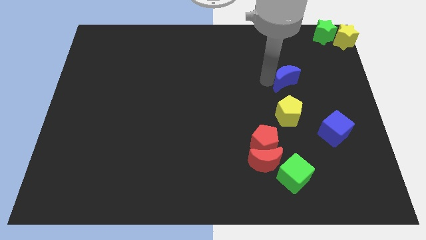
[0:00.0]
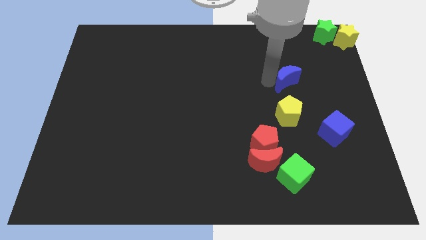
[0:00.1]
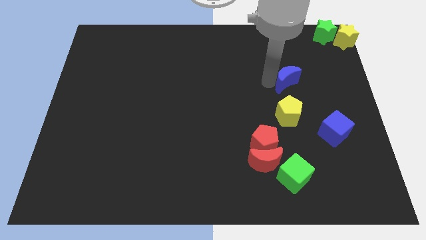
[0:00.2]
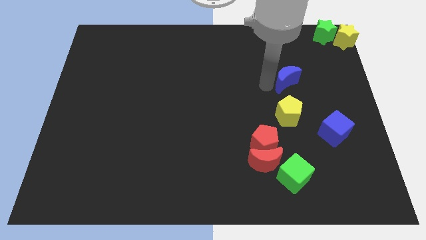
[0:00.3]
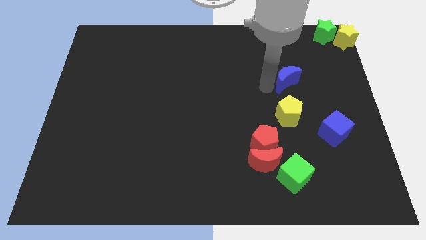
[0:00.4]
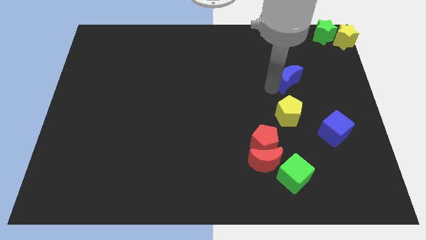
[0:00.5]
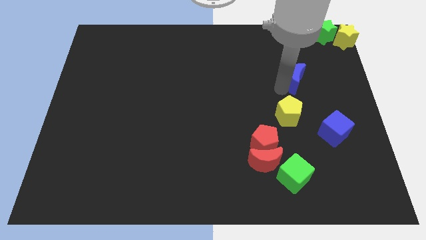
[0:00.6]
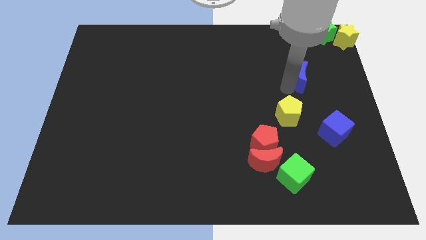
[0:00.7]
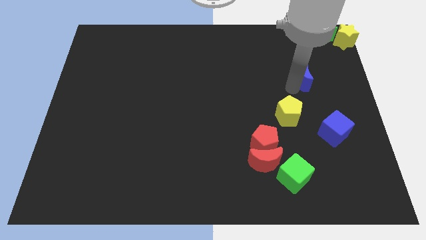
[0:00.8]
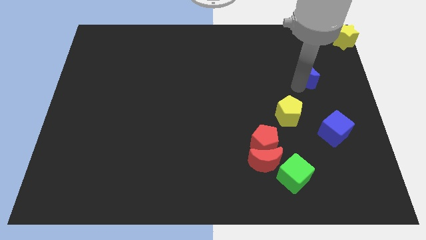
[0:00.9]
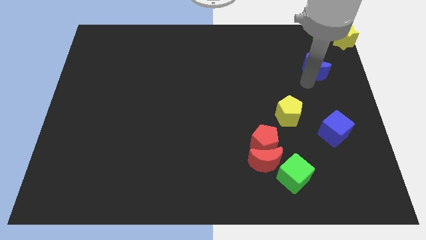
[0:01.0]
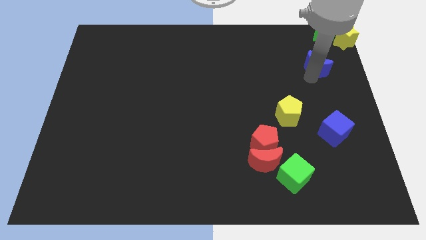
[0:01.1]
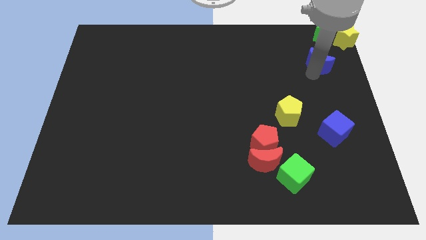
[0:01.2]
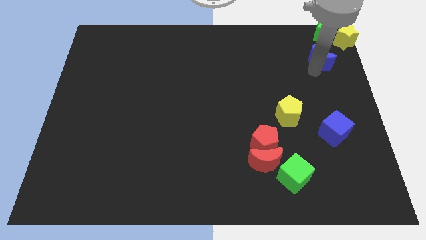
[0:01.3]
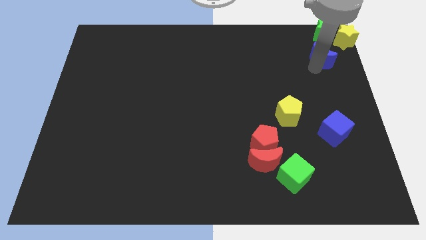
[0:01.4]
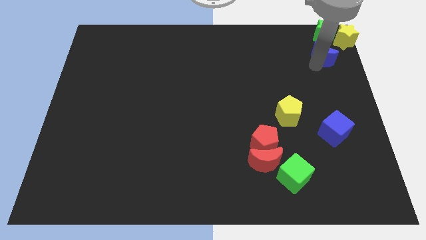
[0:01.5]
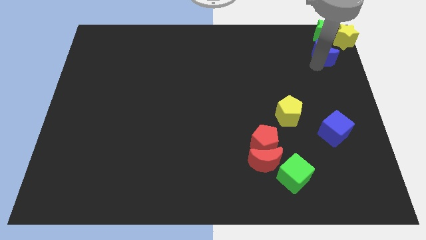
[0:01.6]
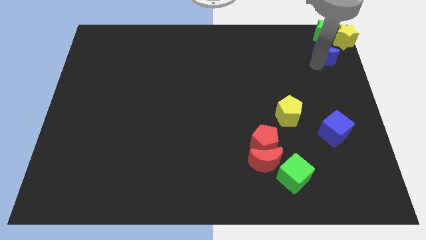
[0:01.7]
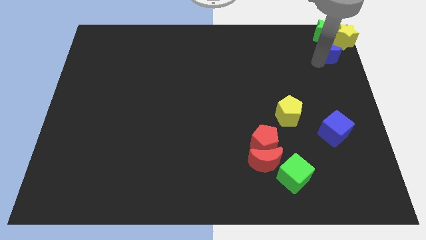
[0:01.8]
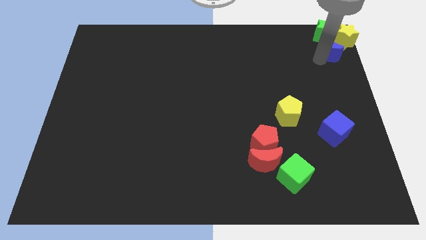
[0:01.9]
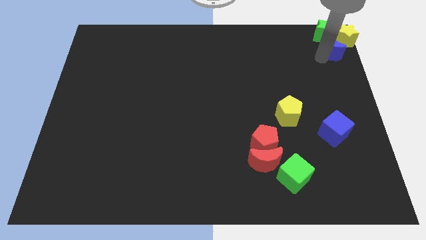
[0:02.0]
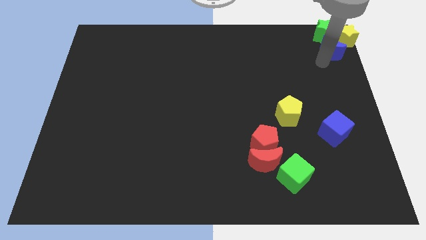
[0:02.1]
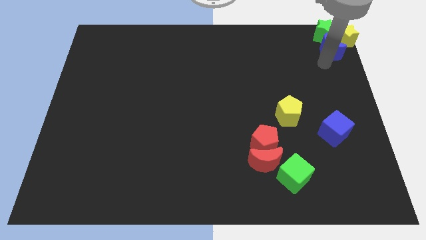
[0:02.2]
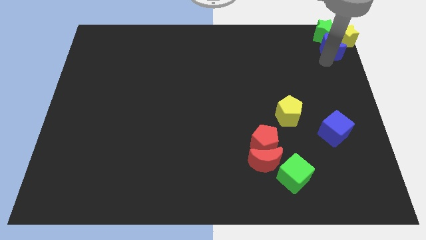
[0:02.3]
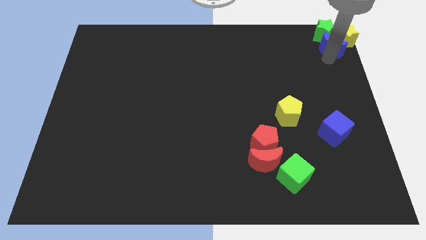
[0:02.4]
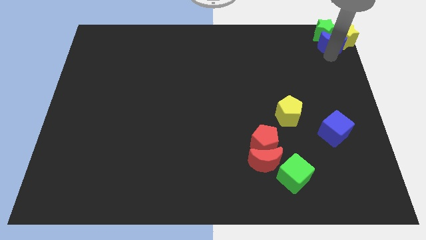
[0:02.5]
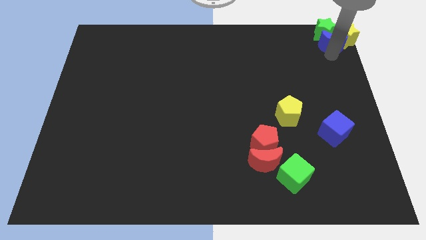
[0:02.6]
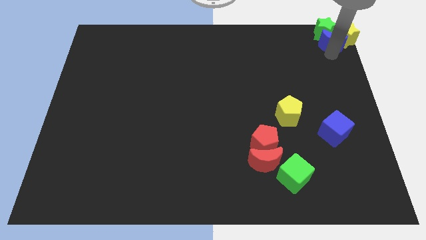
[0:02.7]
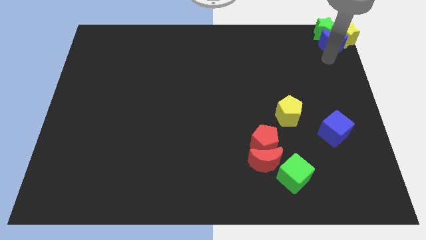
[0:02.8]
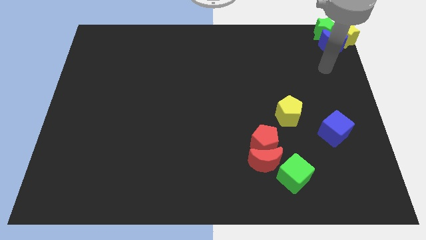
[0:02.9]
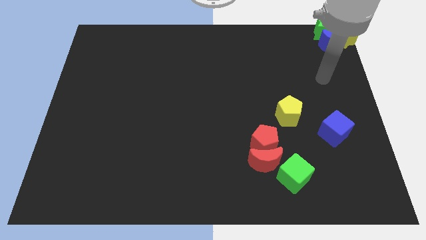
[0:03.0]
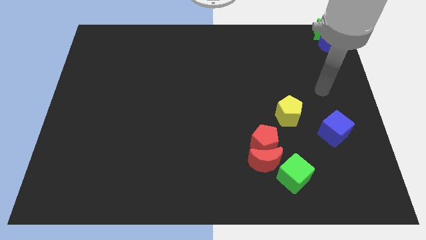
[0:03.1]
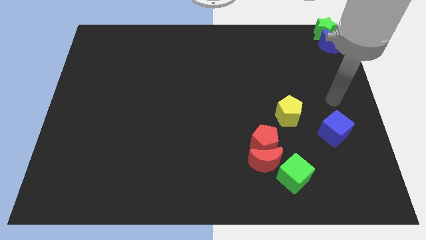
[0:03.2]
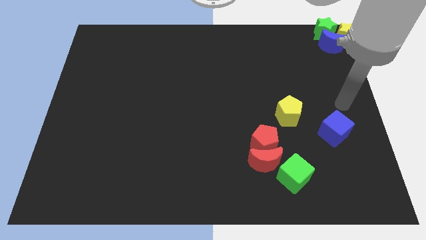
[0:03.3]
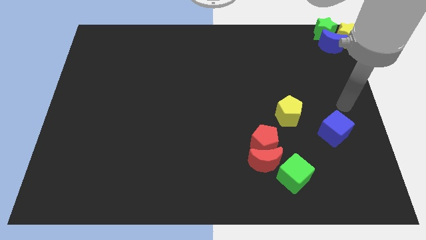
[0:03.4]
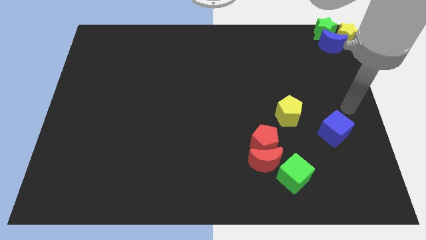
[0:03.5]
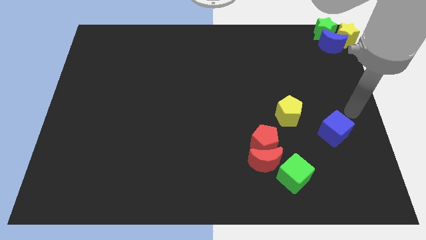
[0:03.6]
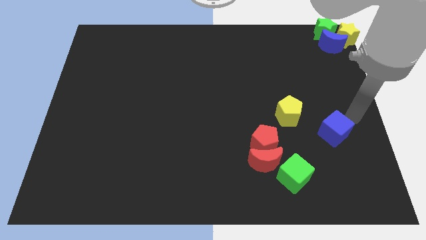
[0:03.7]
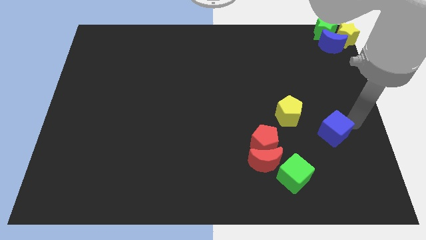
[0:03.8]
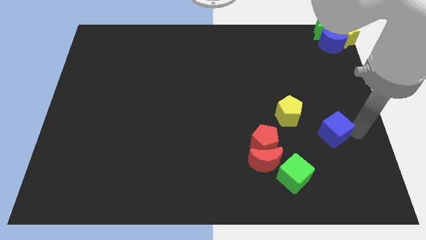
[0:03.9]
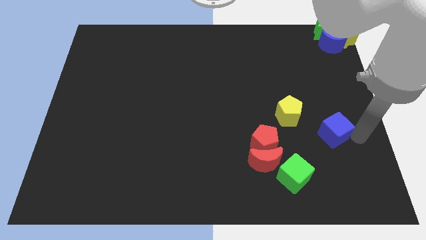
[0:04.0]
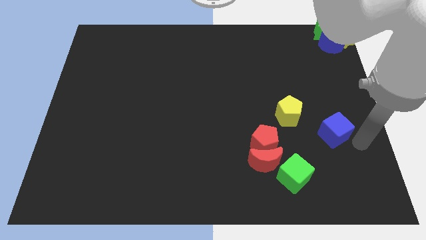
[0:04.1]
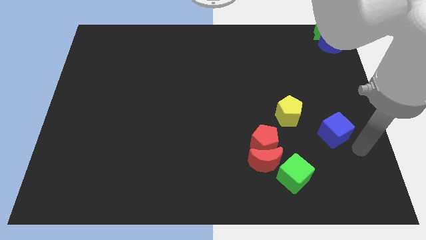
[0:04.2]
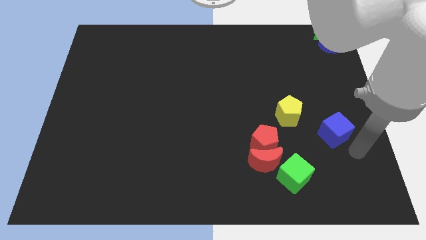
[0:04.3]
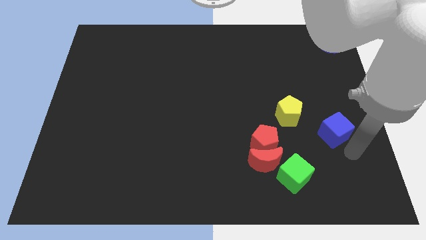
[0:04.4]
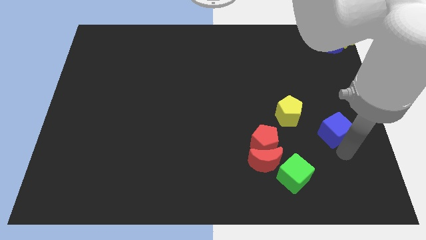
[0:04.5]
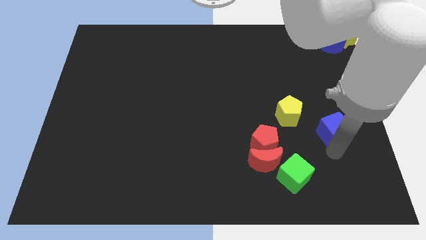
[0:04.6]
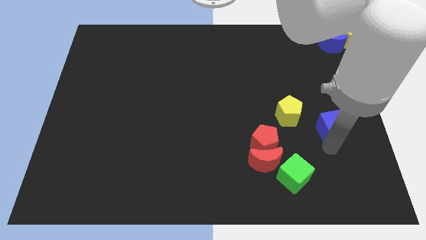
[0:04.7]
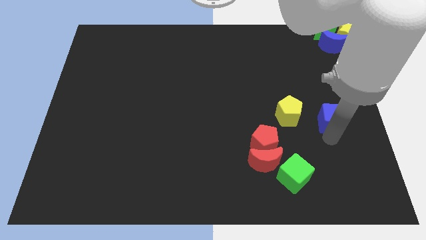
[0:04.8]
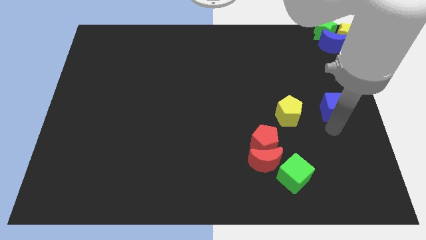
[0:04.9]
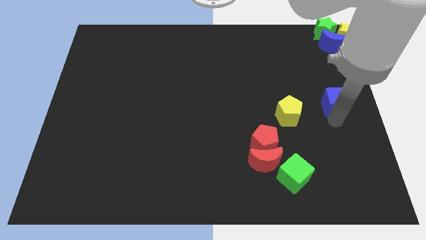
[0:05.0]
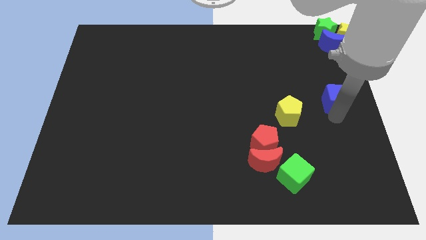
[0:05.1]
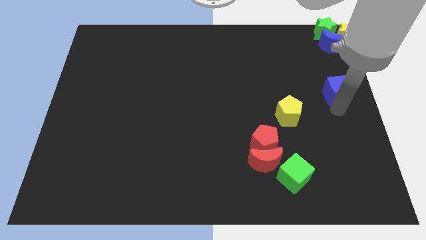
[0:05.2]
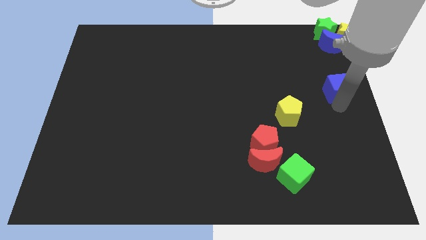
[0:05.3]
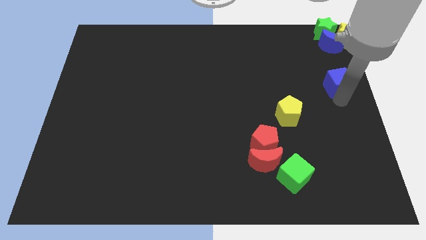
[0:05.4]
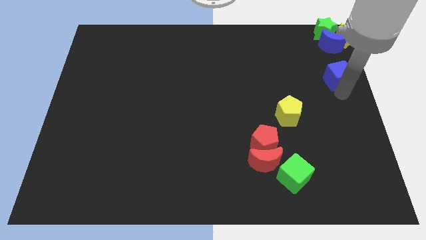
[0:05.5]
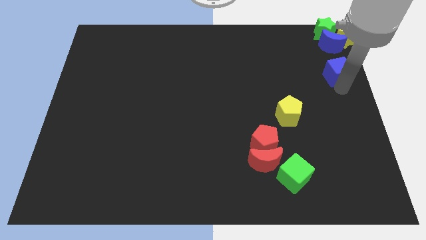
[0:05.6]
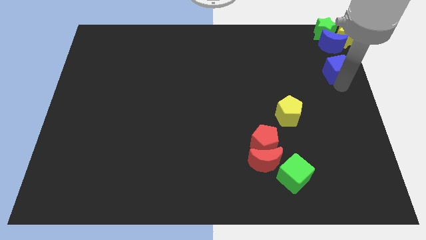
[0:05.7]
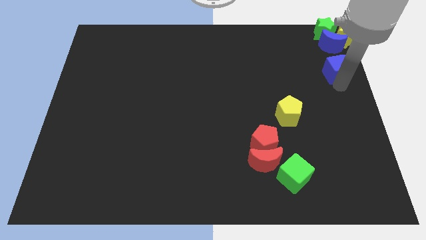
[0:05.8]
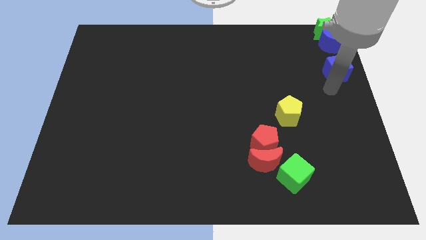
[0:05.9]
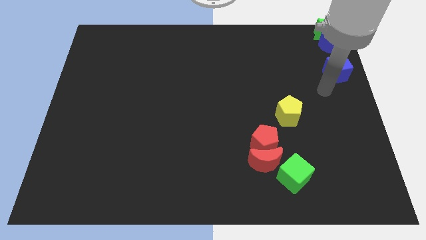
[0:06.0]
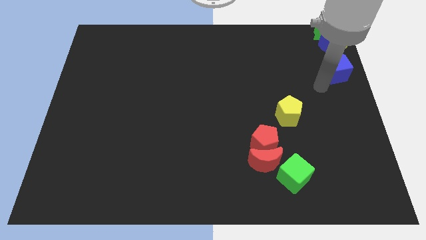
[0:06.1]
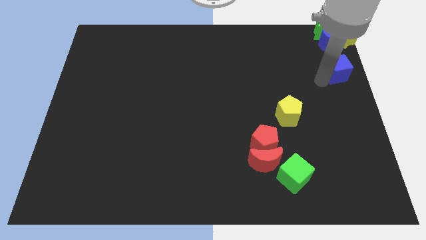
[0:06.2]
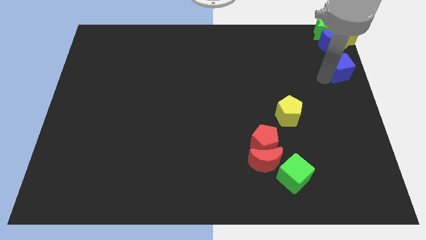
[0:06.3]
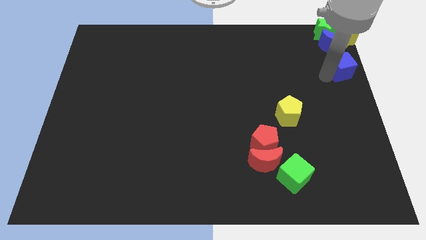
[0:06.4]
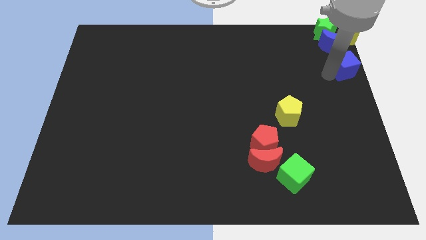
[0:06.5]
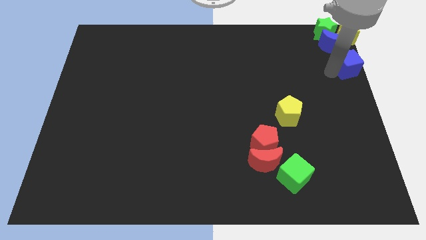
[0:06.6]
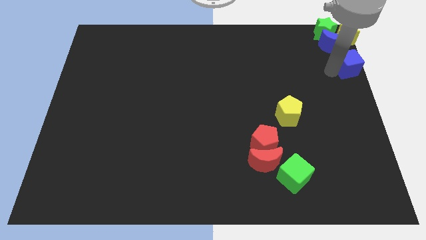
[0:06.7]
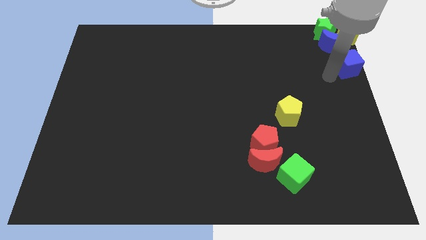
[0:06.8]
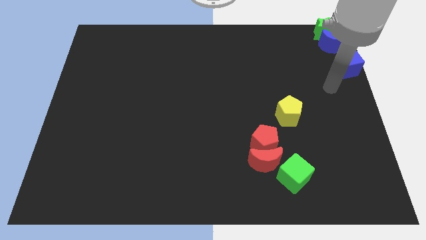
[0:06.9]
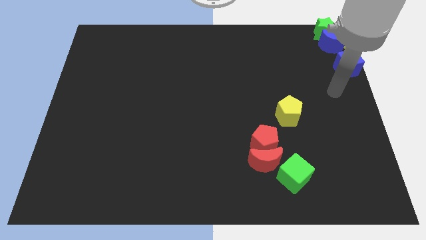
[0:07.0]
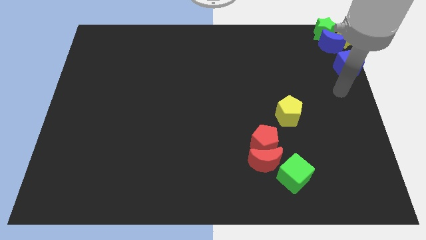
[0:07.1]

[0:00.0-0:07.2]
move the blue cube to the top right of the board

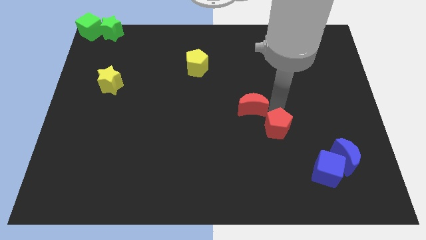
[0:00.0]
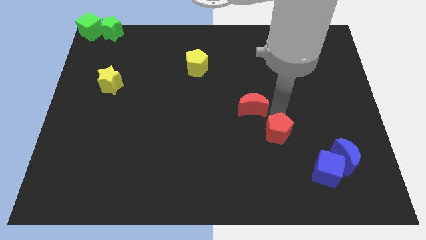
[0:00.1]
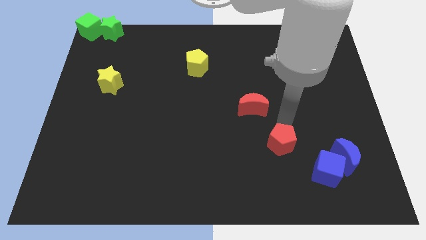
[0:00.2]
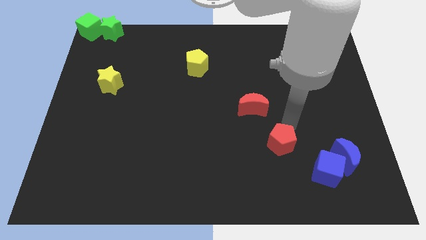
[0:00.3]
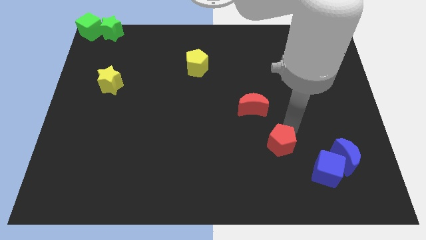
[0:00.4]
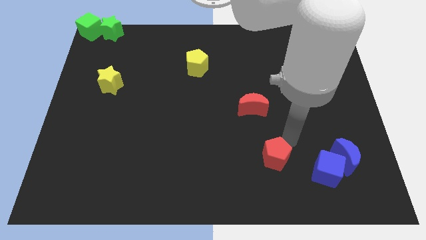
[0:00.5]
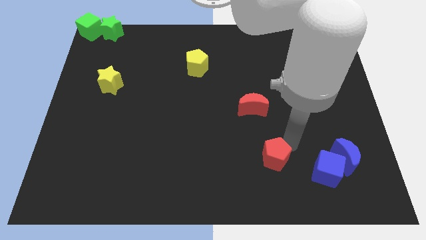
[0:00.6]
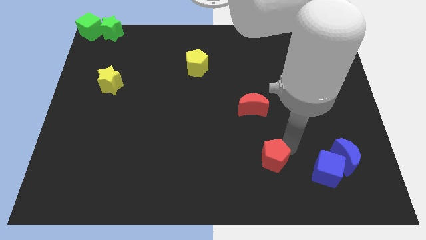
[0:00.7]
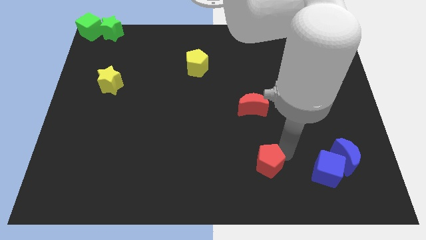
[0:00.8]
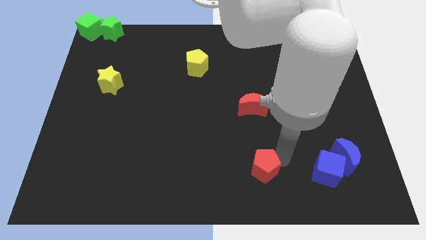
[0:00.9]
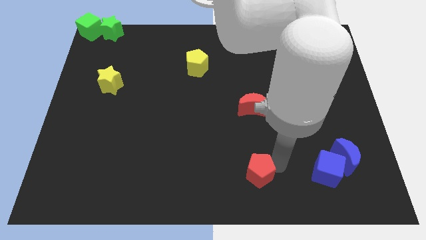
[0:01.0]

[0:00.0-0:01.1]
push red pentagon below red crescent

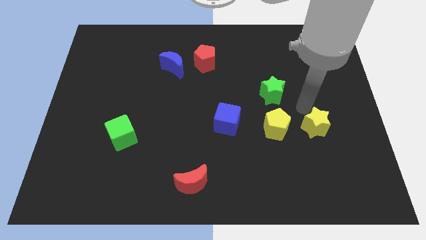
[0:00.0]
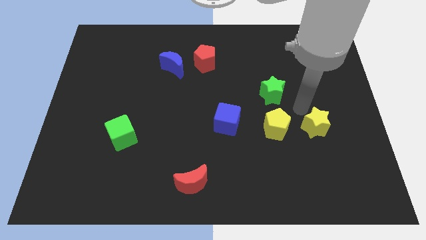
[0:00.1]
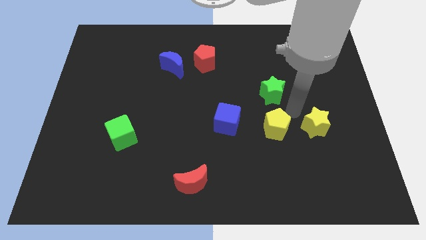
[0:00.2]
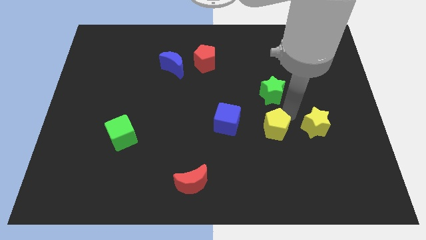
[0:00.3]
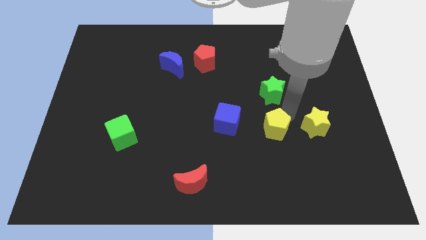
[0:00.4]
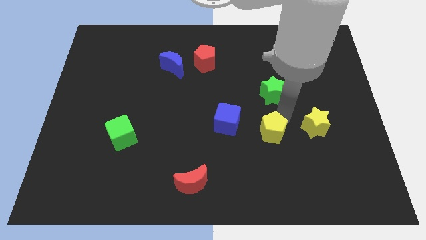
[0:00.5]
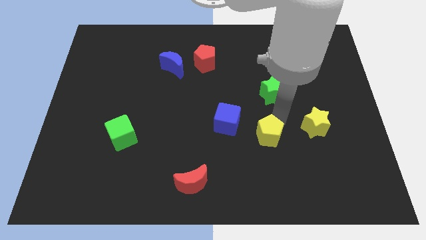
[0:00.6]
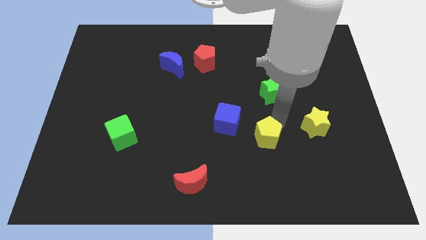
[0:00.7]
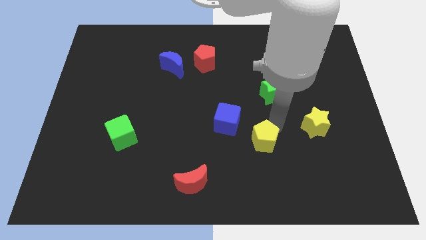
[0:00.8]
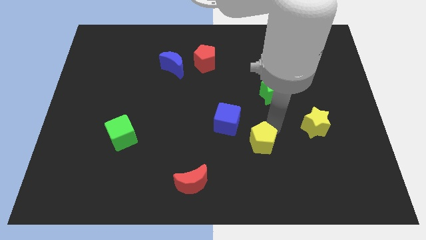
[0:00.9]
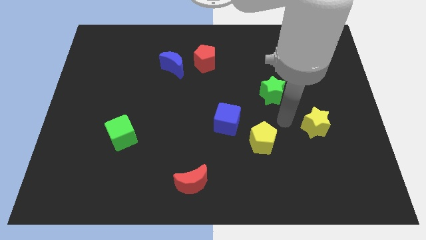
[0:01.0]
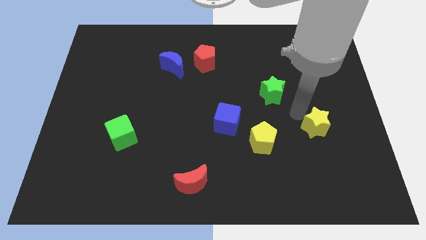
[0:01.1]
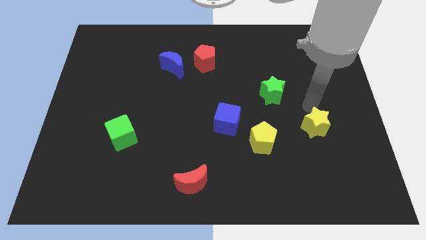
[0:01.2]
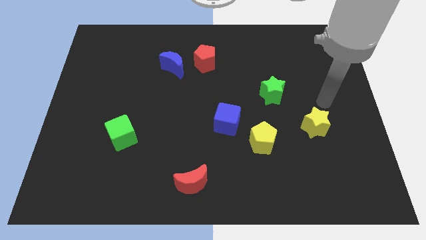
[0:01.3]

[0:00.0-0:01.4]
slightly push the yellow pentagon towards the bottom side
